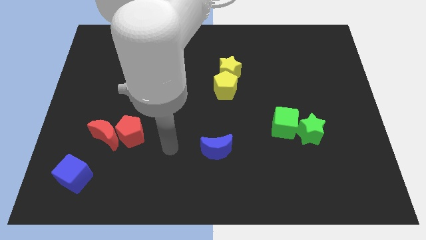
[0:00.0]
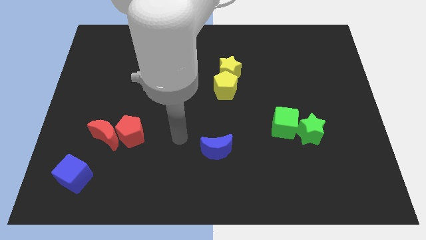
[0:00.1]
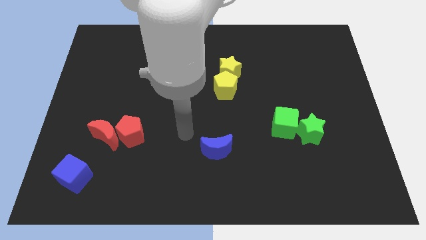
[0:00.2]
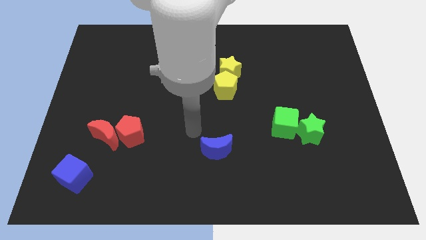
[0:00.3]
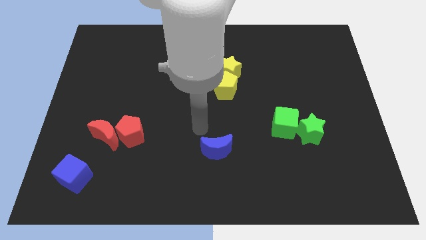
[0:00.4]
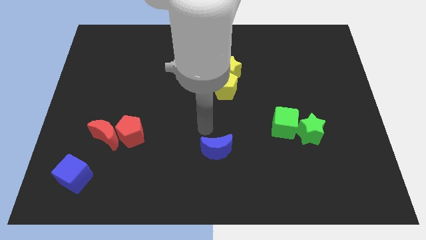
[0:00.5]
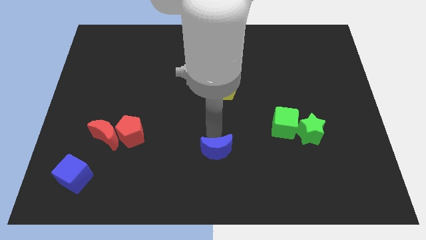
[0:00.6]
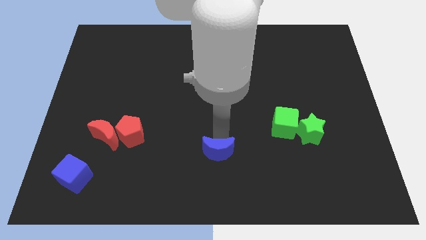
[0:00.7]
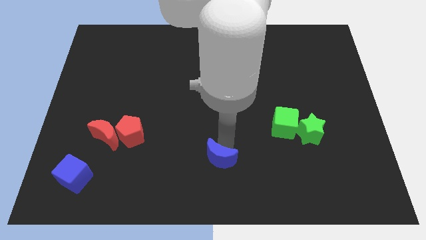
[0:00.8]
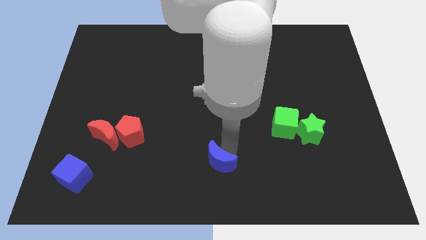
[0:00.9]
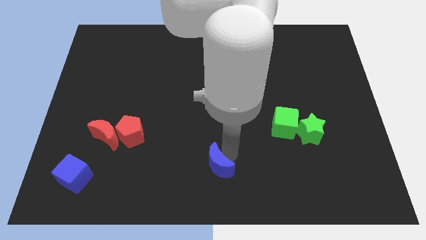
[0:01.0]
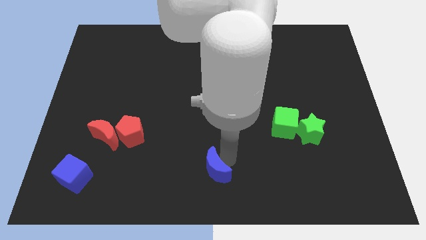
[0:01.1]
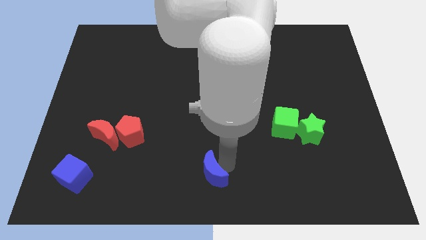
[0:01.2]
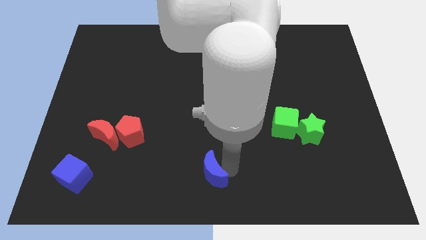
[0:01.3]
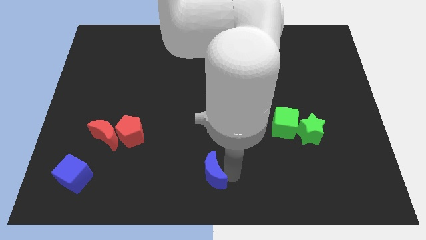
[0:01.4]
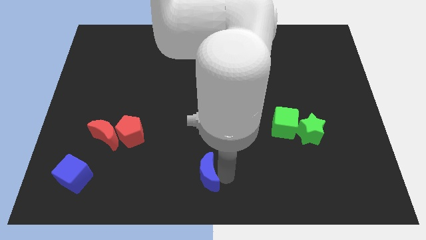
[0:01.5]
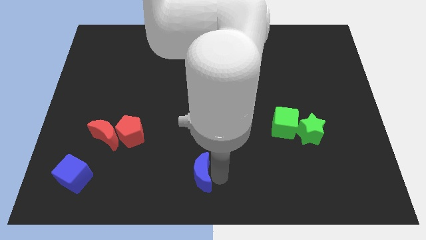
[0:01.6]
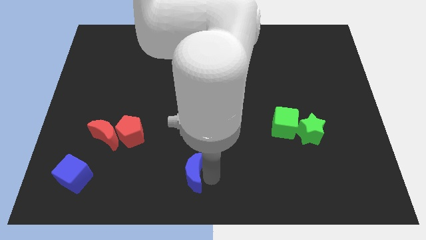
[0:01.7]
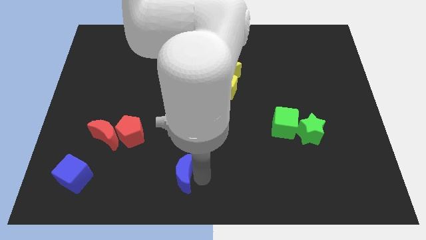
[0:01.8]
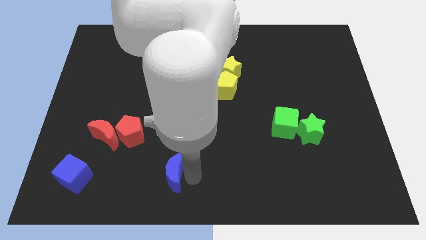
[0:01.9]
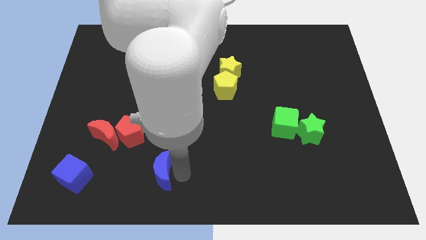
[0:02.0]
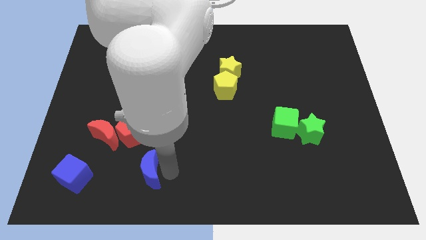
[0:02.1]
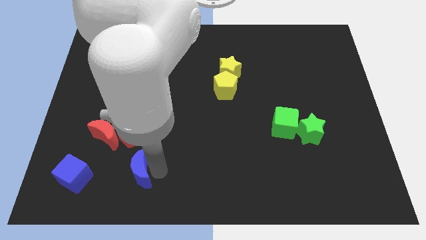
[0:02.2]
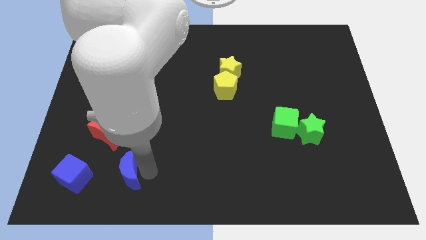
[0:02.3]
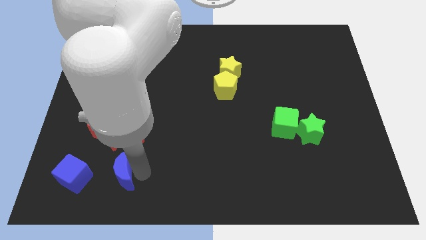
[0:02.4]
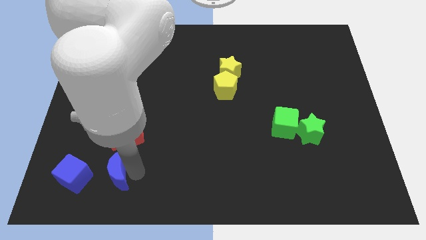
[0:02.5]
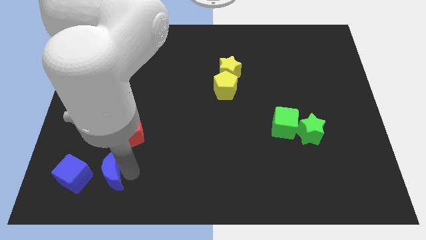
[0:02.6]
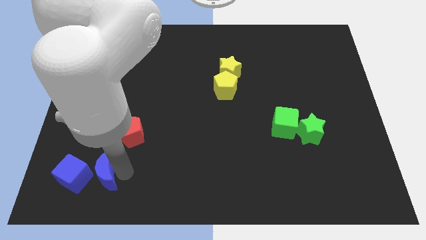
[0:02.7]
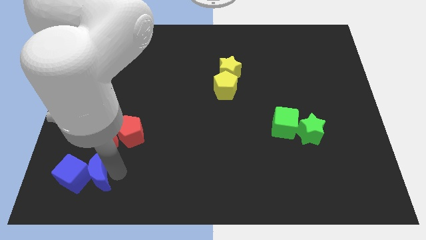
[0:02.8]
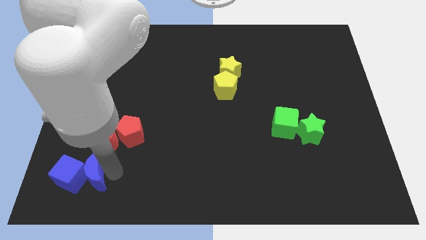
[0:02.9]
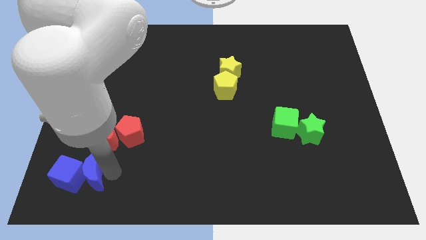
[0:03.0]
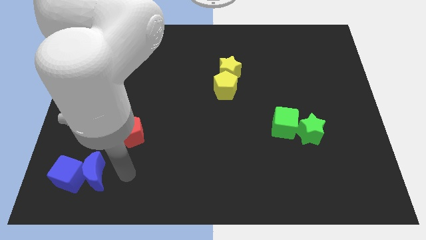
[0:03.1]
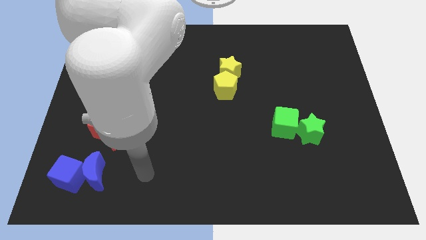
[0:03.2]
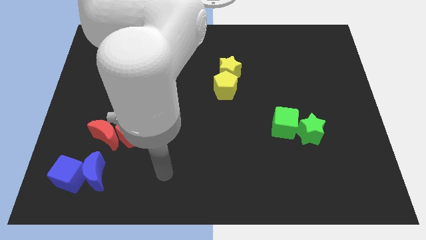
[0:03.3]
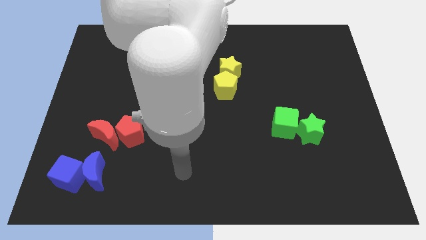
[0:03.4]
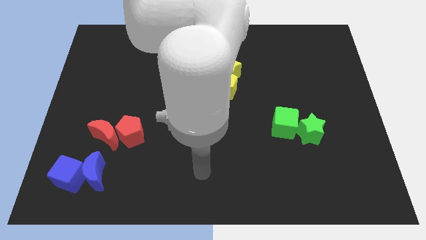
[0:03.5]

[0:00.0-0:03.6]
push the blue moon into the blue cube

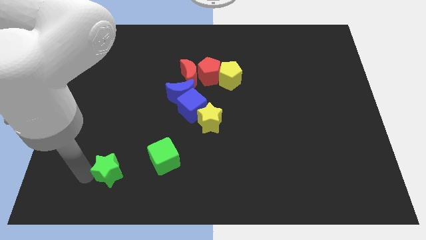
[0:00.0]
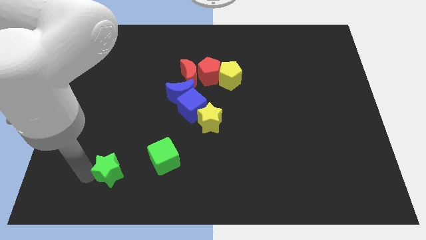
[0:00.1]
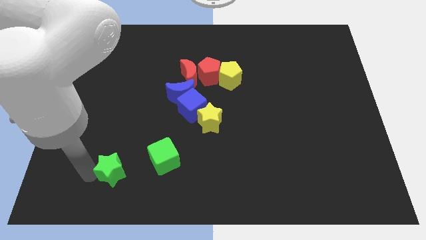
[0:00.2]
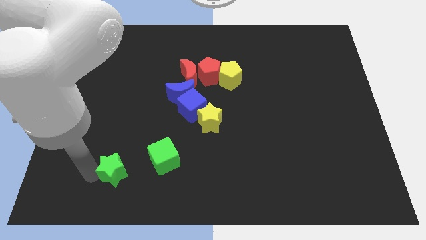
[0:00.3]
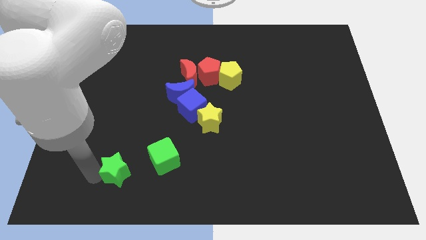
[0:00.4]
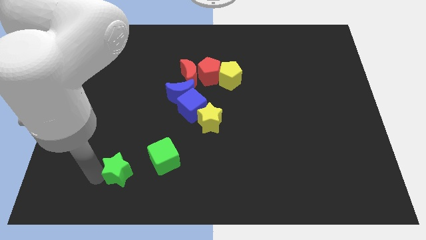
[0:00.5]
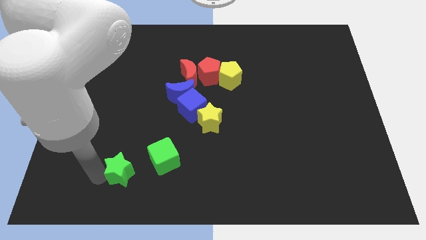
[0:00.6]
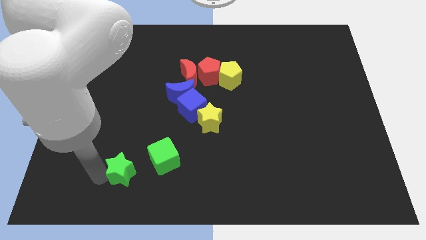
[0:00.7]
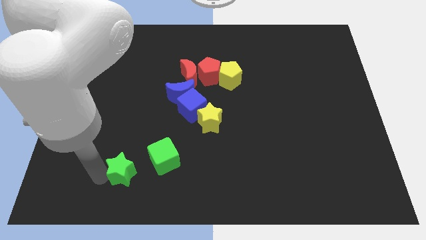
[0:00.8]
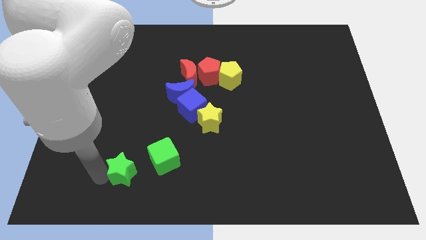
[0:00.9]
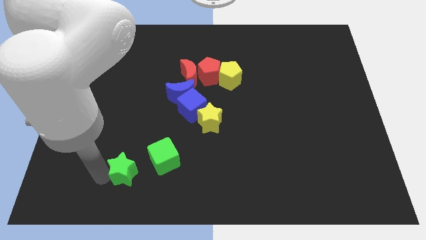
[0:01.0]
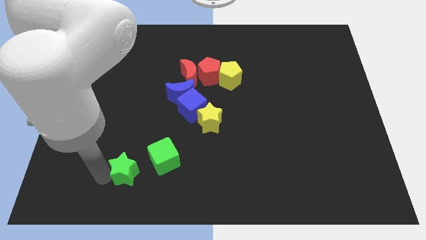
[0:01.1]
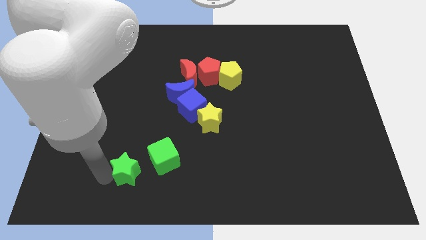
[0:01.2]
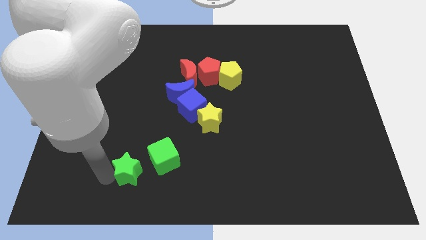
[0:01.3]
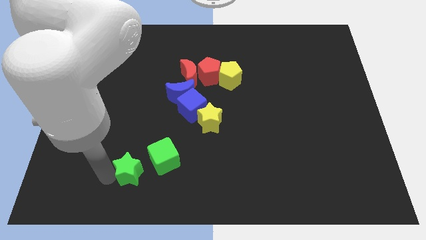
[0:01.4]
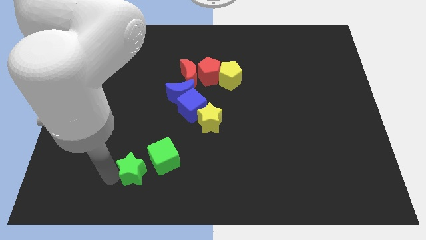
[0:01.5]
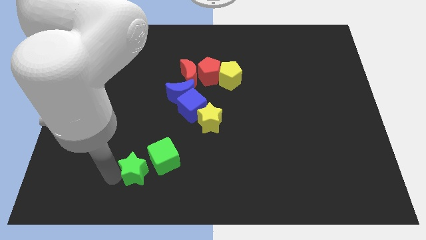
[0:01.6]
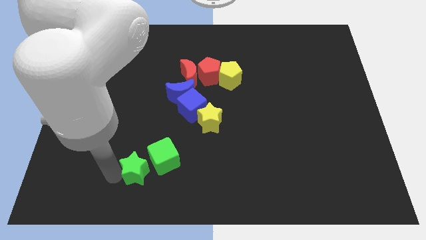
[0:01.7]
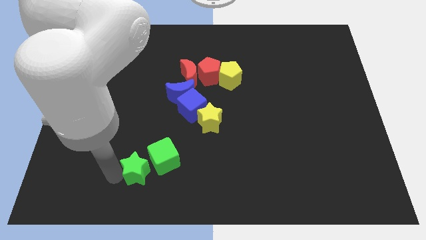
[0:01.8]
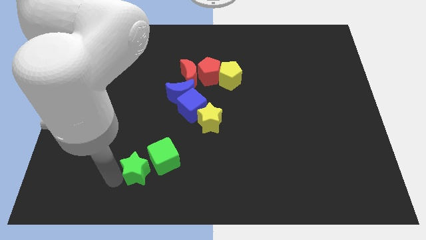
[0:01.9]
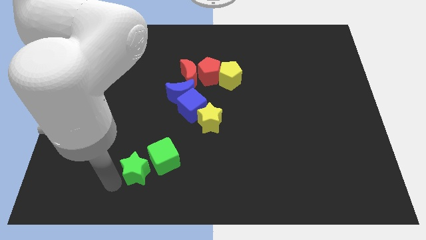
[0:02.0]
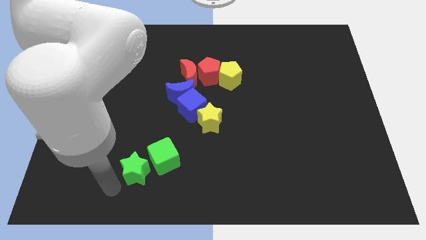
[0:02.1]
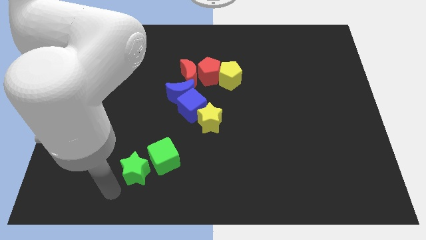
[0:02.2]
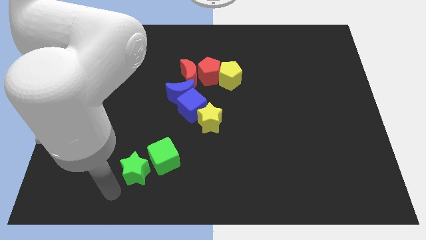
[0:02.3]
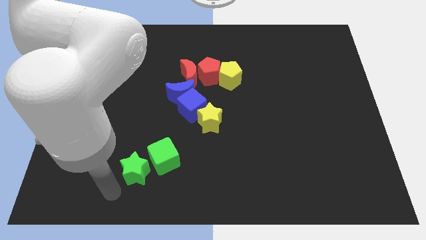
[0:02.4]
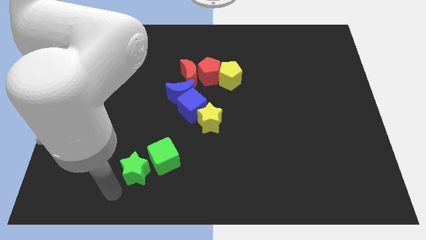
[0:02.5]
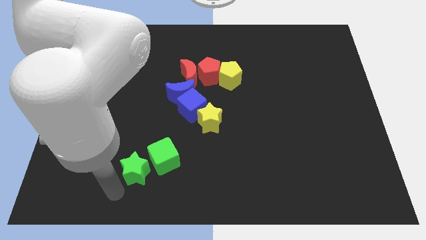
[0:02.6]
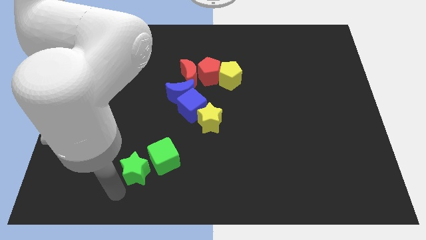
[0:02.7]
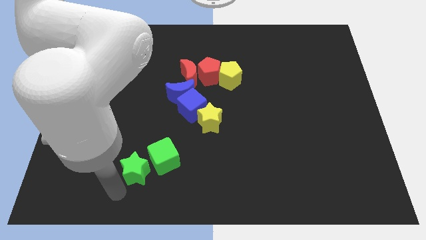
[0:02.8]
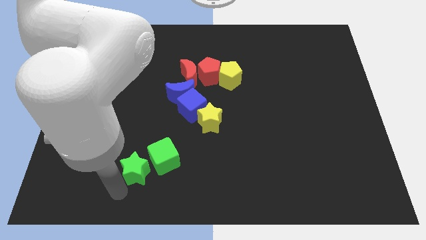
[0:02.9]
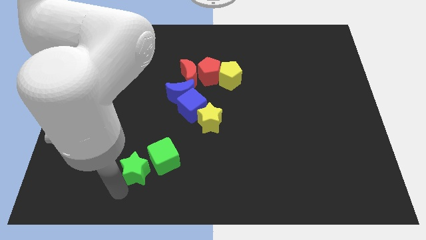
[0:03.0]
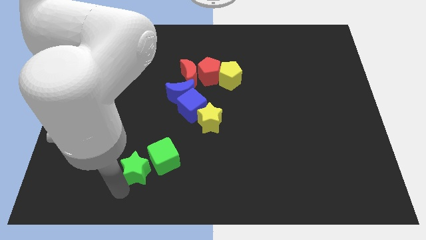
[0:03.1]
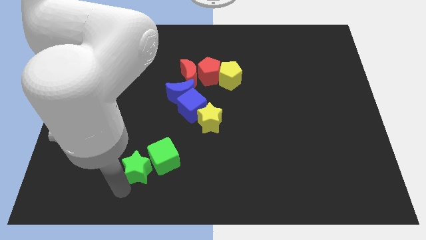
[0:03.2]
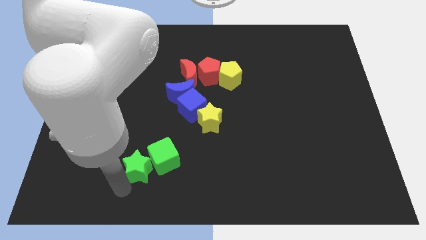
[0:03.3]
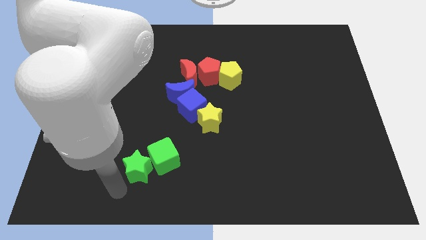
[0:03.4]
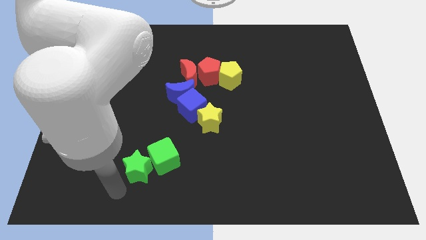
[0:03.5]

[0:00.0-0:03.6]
move green star close to the green block

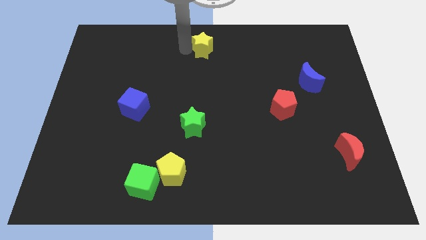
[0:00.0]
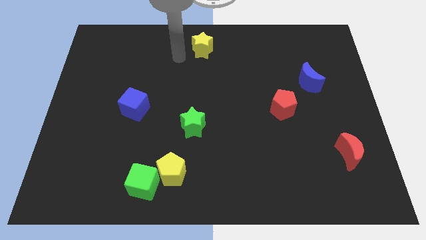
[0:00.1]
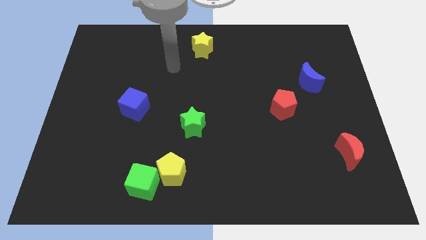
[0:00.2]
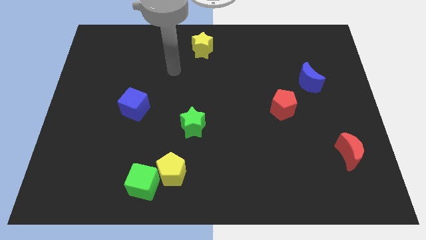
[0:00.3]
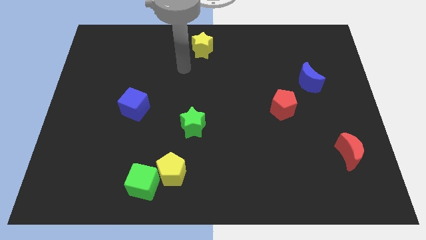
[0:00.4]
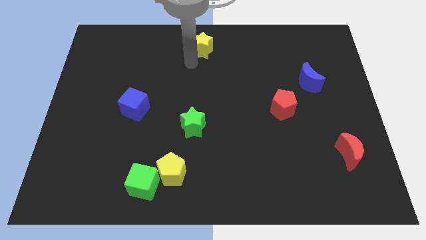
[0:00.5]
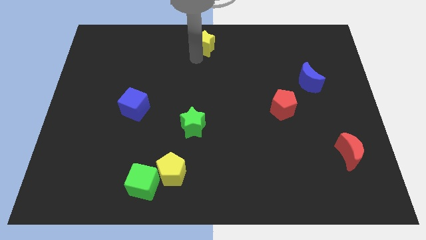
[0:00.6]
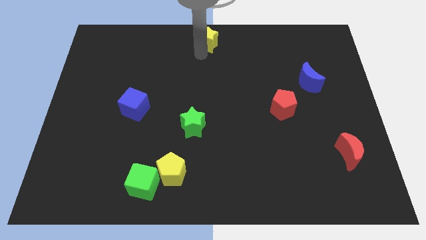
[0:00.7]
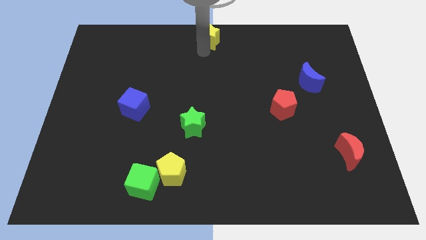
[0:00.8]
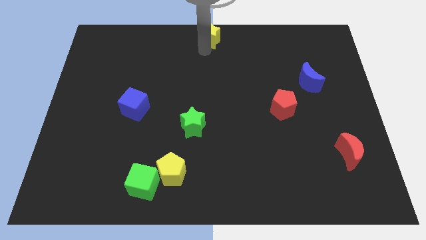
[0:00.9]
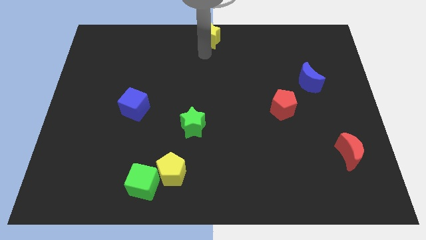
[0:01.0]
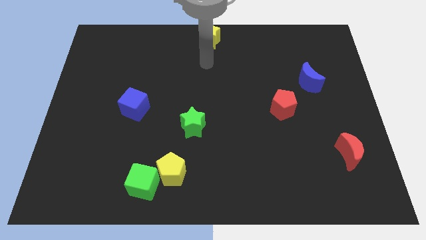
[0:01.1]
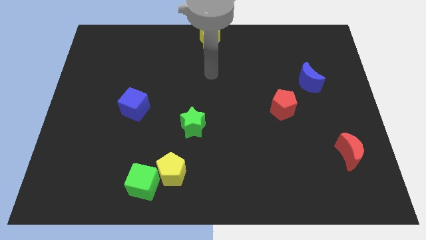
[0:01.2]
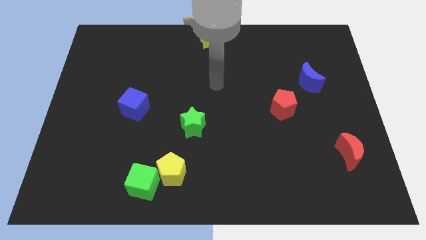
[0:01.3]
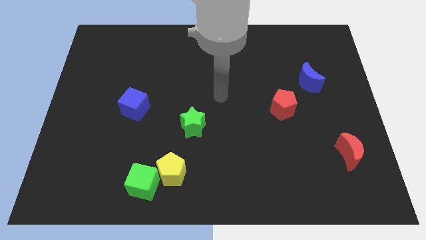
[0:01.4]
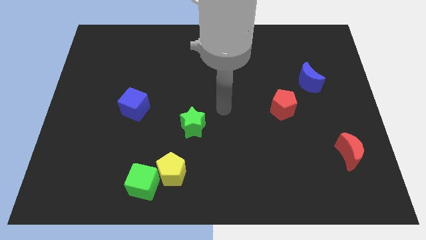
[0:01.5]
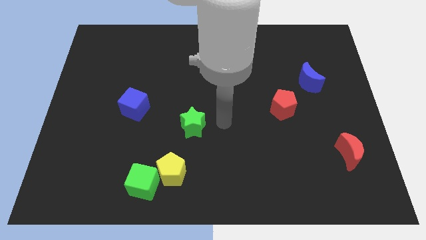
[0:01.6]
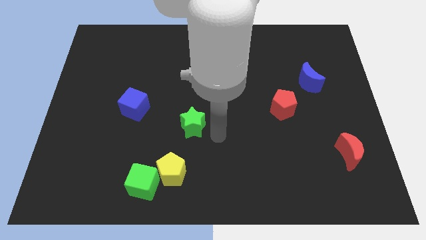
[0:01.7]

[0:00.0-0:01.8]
put the yellow star at the top center
